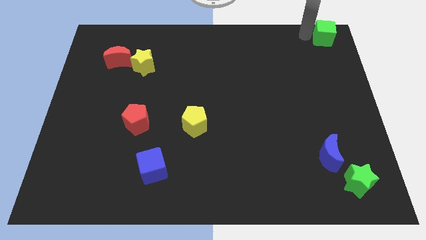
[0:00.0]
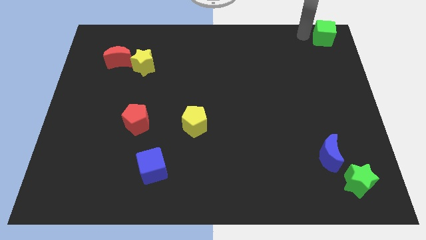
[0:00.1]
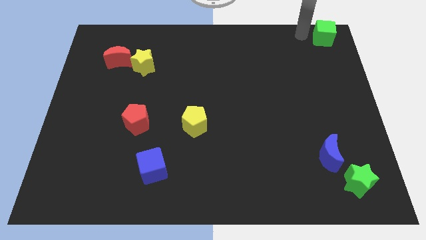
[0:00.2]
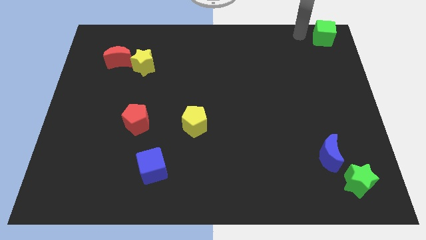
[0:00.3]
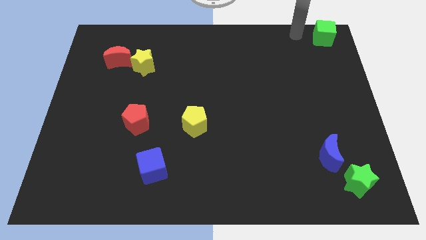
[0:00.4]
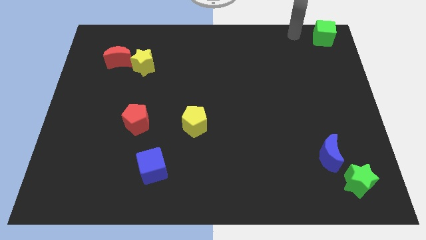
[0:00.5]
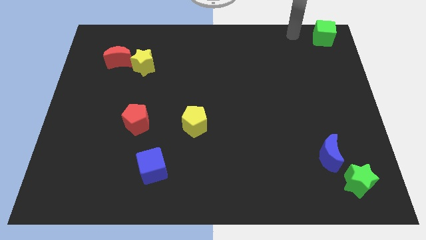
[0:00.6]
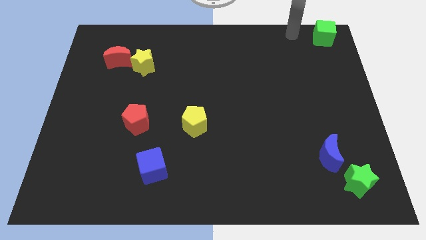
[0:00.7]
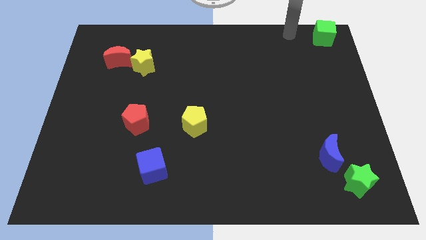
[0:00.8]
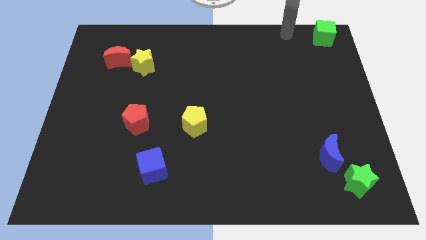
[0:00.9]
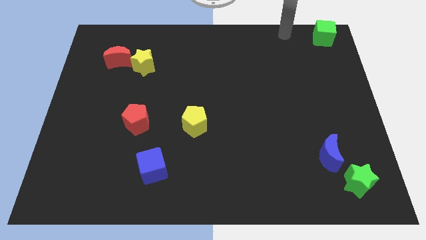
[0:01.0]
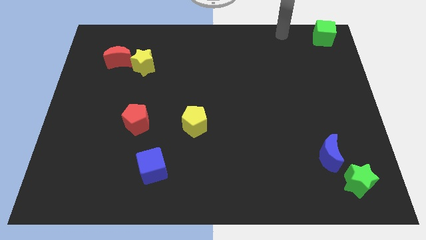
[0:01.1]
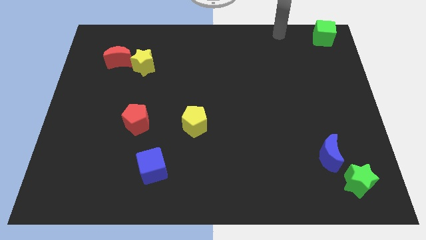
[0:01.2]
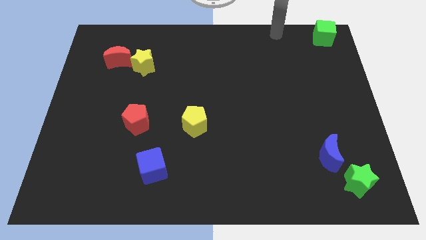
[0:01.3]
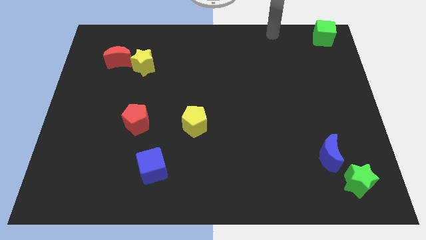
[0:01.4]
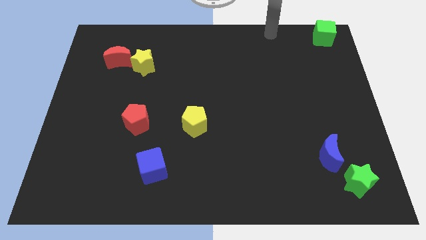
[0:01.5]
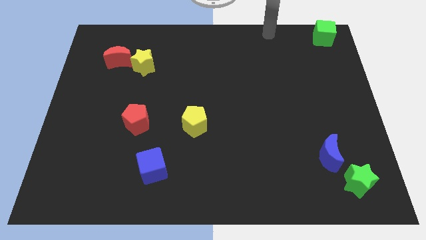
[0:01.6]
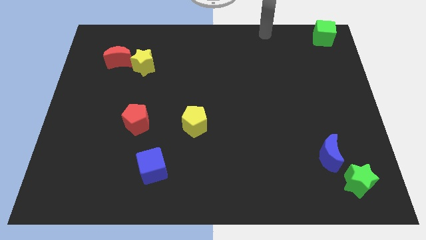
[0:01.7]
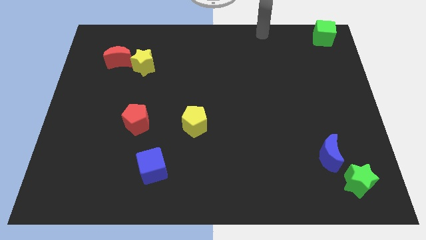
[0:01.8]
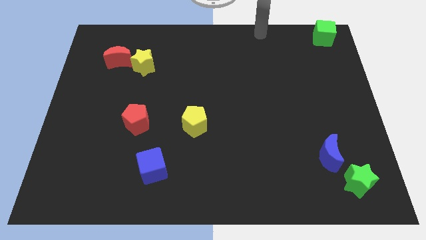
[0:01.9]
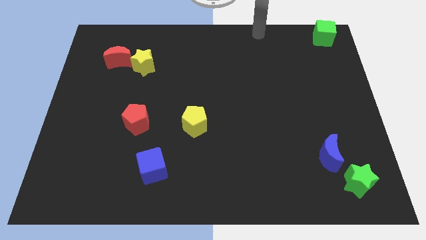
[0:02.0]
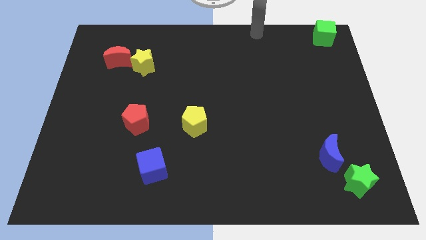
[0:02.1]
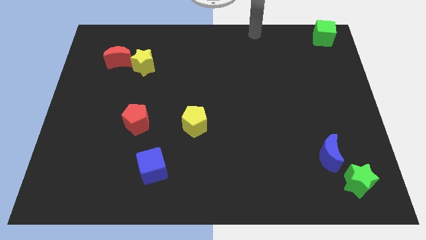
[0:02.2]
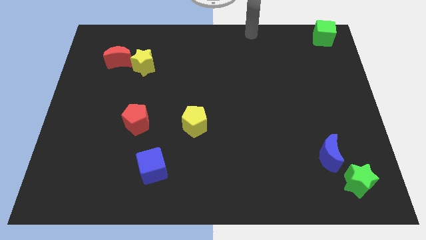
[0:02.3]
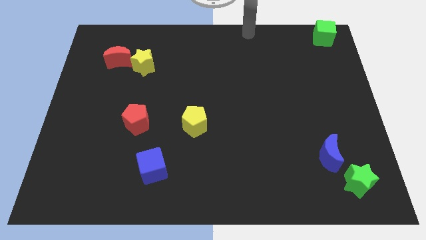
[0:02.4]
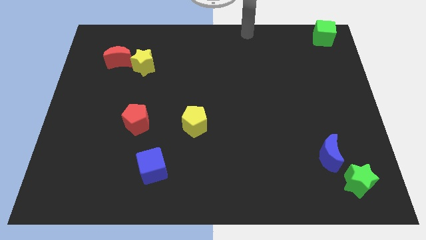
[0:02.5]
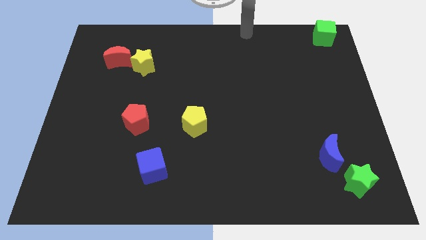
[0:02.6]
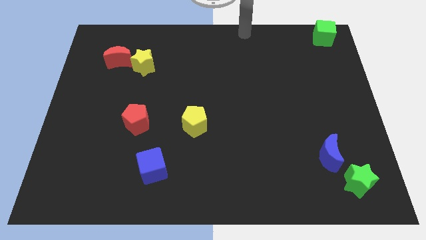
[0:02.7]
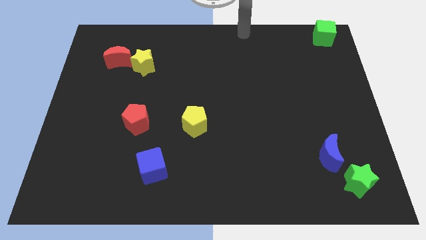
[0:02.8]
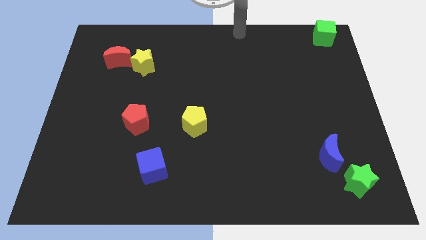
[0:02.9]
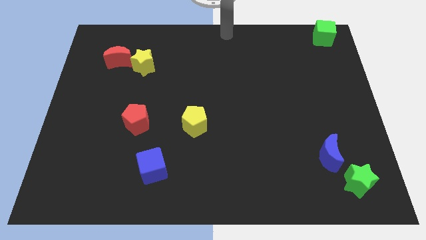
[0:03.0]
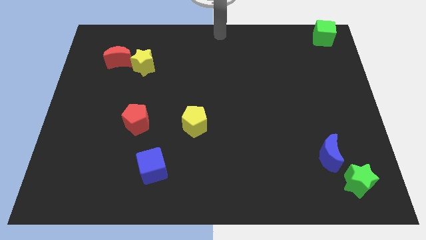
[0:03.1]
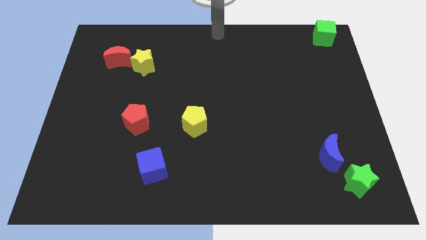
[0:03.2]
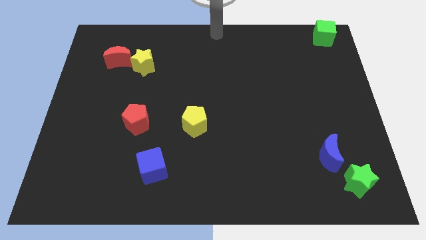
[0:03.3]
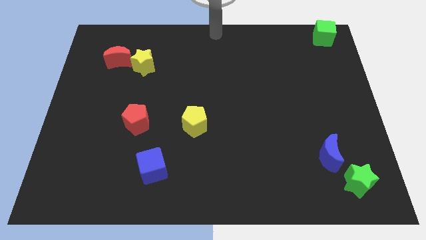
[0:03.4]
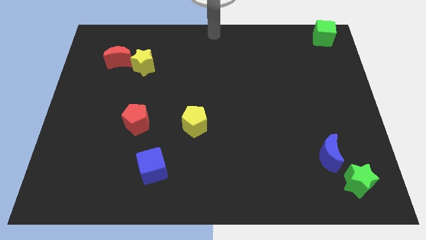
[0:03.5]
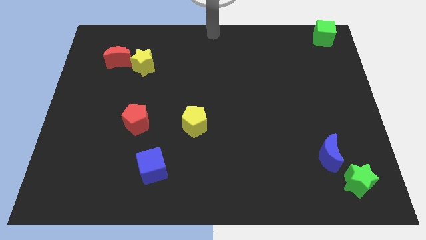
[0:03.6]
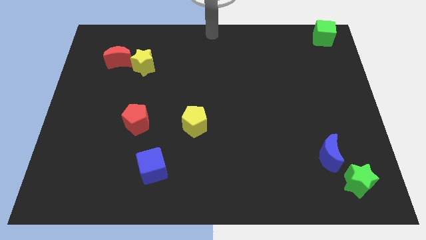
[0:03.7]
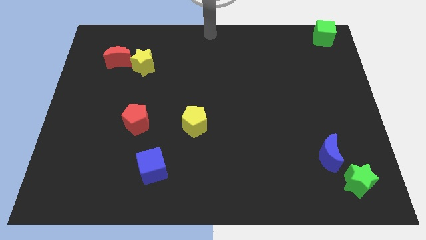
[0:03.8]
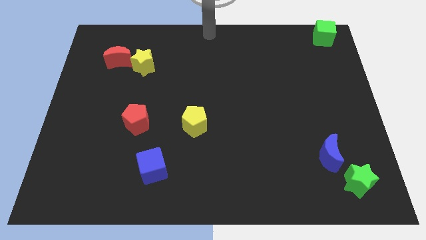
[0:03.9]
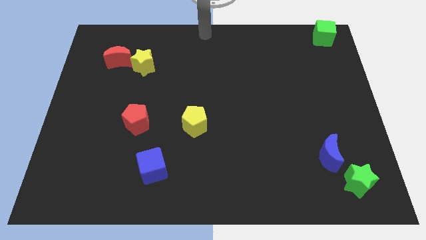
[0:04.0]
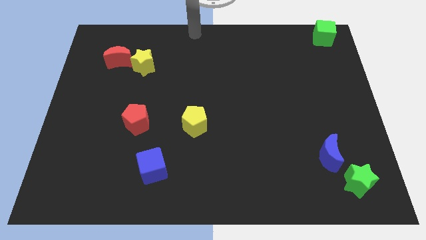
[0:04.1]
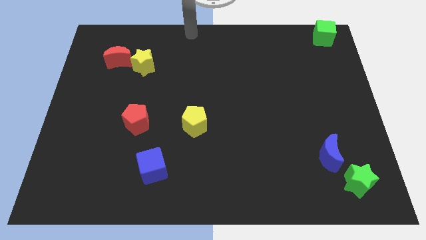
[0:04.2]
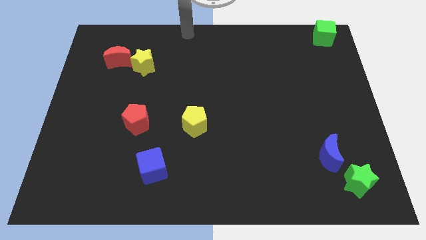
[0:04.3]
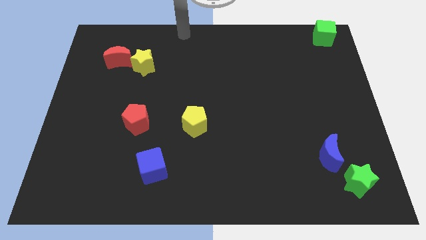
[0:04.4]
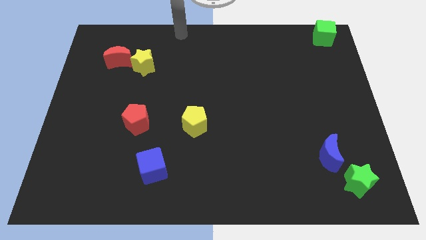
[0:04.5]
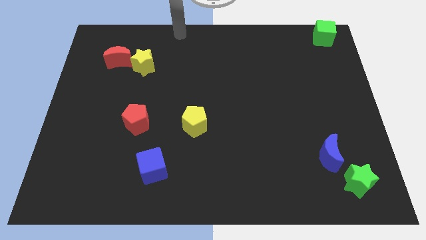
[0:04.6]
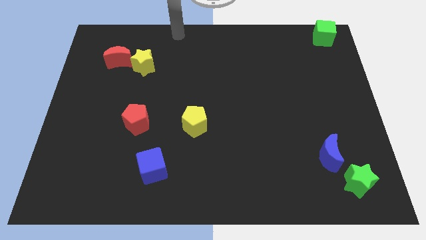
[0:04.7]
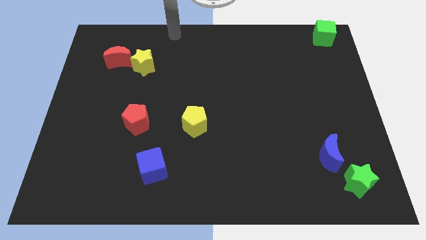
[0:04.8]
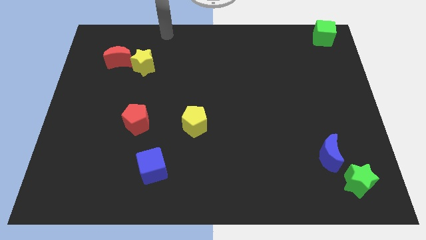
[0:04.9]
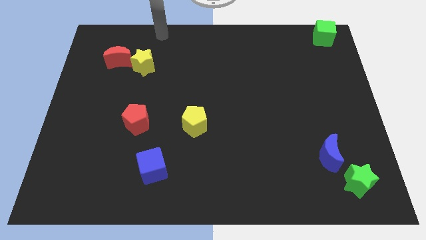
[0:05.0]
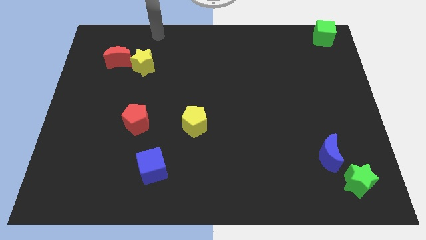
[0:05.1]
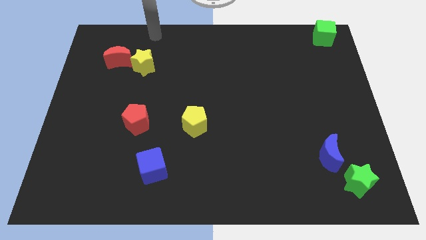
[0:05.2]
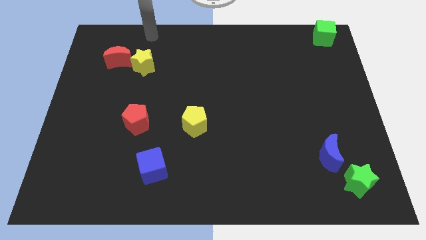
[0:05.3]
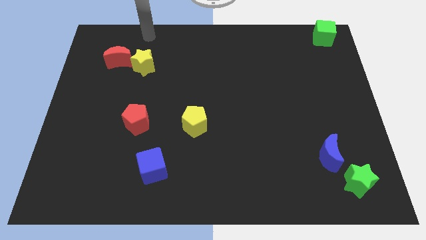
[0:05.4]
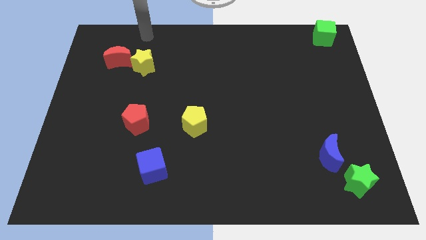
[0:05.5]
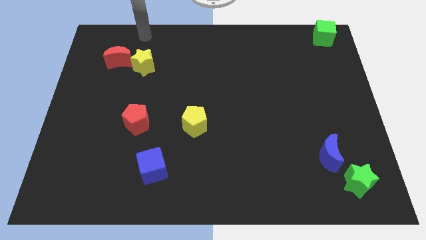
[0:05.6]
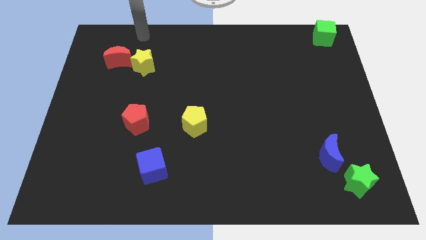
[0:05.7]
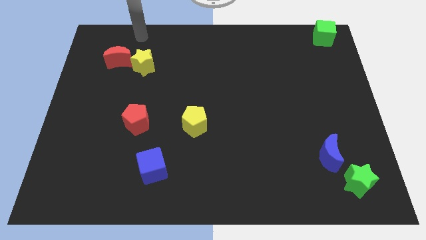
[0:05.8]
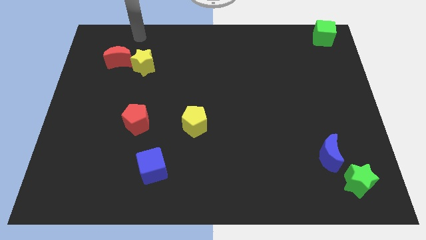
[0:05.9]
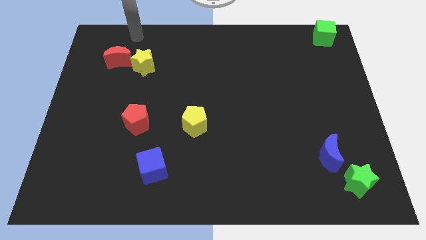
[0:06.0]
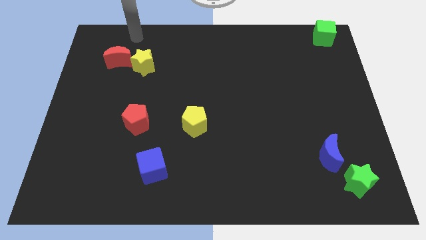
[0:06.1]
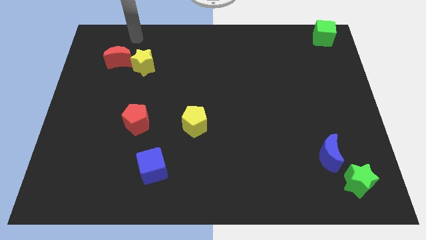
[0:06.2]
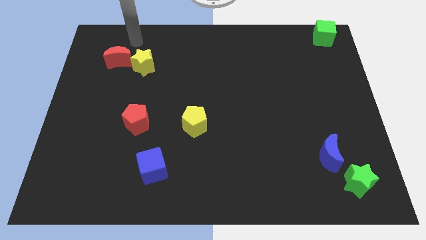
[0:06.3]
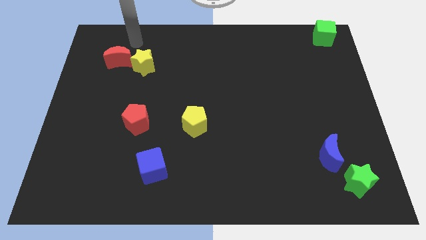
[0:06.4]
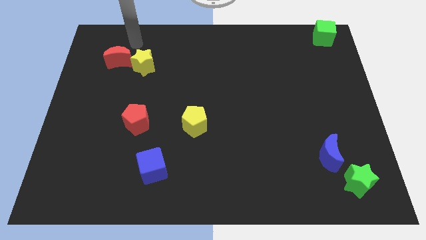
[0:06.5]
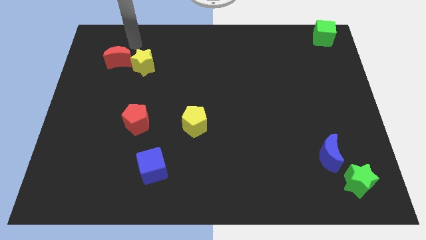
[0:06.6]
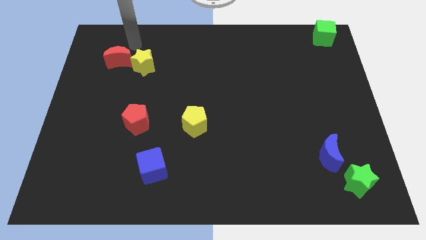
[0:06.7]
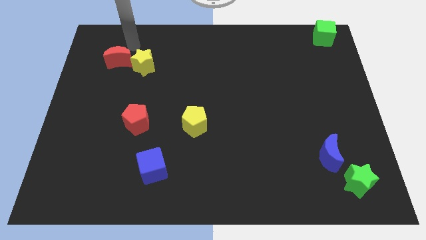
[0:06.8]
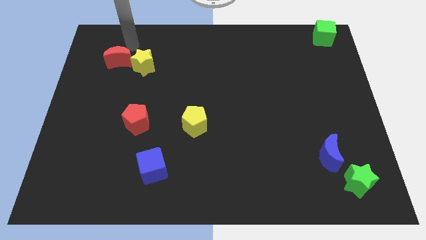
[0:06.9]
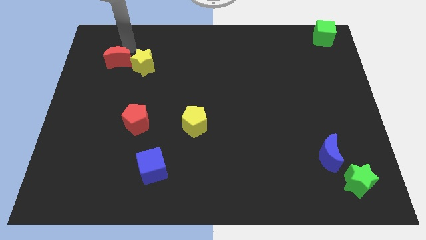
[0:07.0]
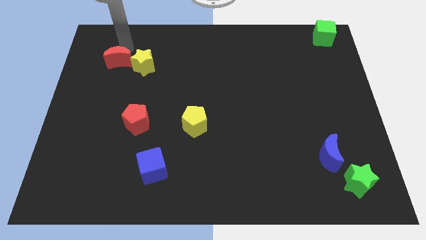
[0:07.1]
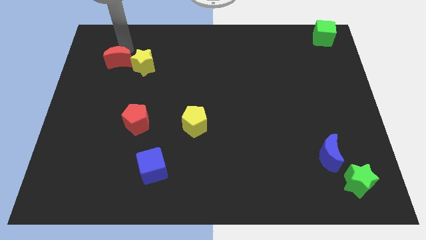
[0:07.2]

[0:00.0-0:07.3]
move arm near red crescent

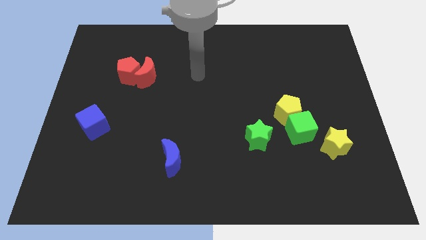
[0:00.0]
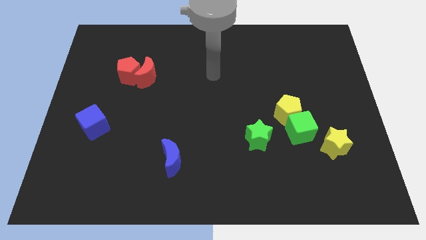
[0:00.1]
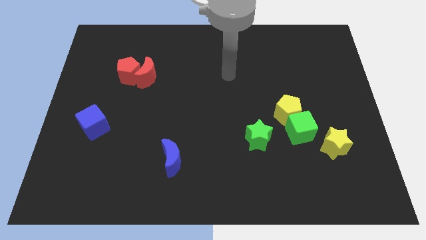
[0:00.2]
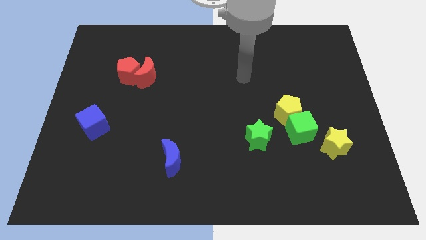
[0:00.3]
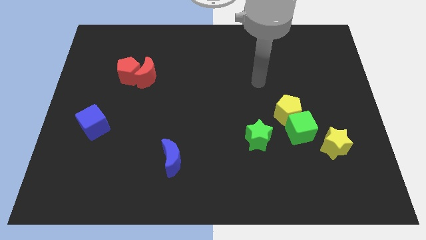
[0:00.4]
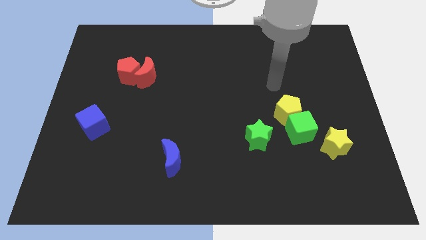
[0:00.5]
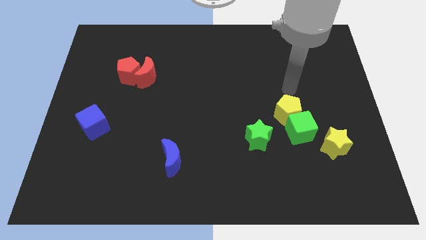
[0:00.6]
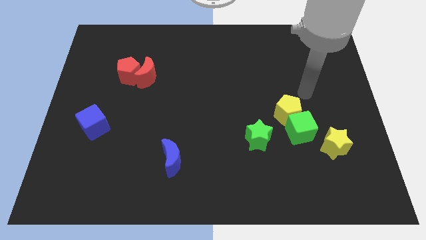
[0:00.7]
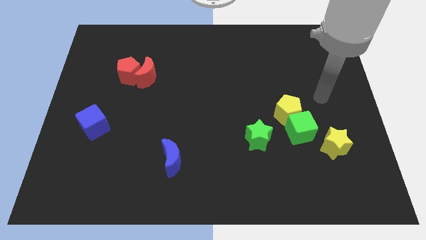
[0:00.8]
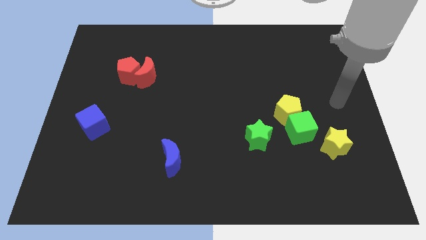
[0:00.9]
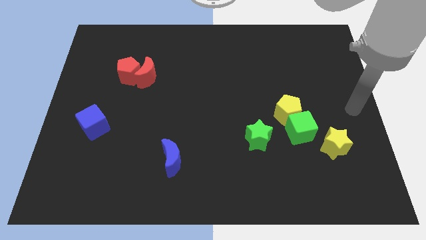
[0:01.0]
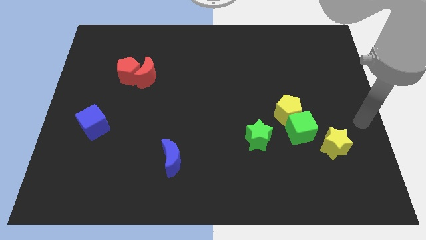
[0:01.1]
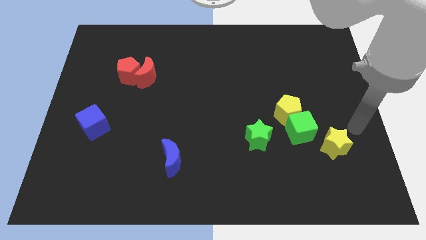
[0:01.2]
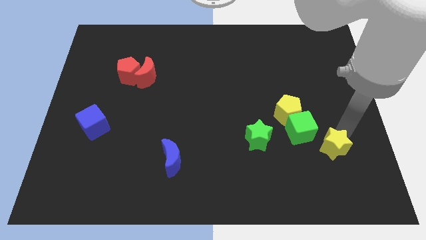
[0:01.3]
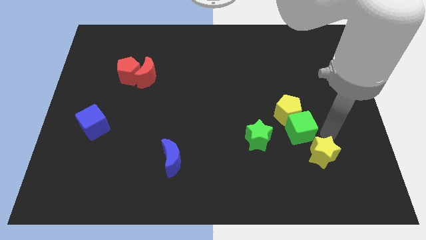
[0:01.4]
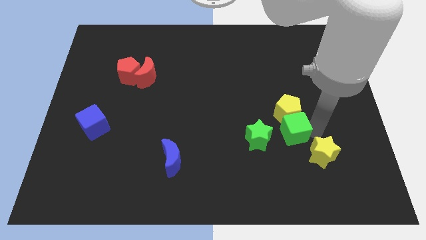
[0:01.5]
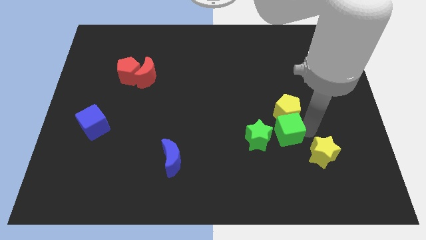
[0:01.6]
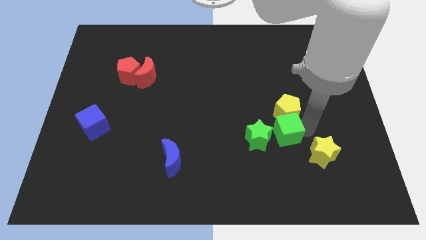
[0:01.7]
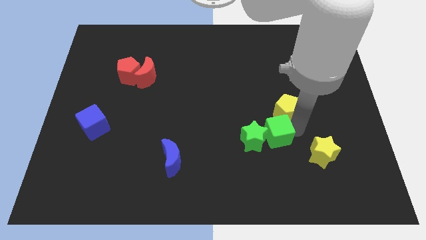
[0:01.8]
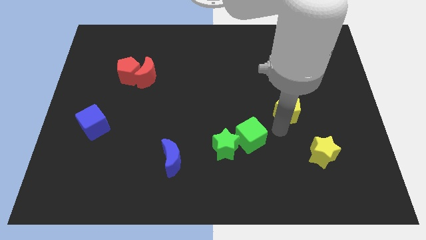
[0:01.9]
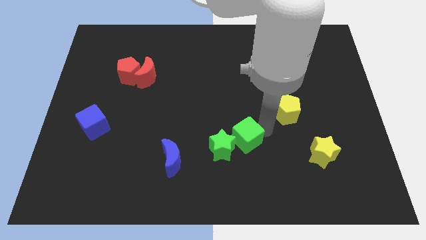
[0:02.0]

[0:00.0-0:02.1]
move the green cube into the green star
